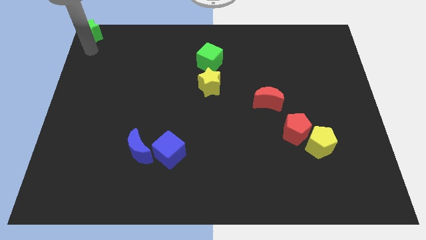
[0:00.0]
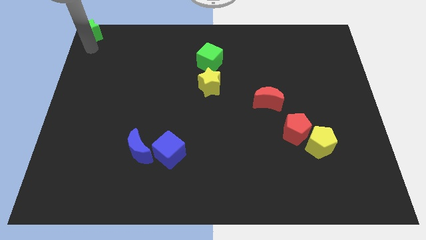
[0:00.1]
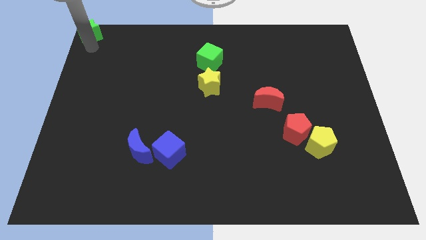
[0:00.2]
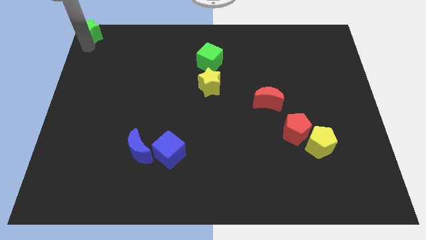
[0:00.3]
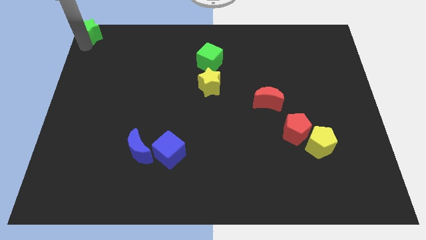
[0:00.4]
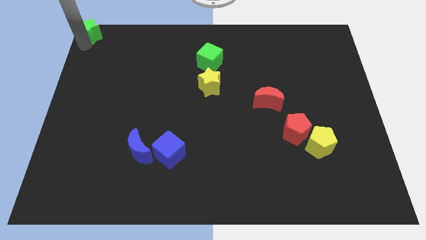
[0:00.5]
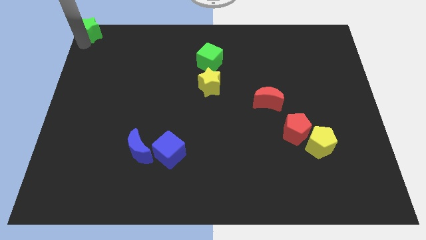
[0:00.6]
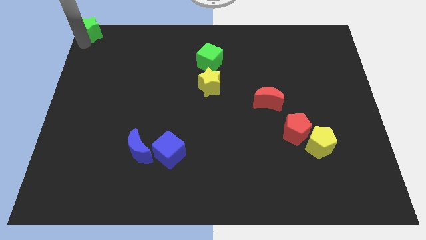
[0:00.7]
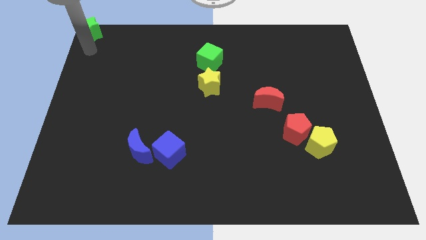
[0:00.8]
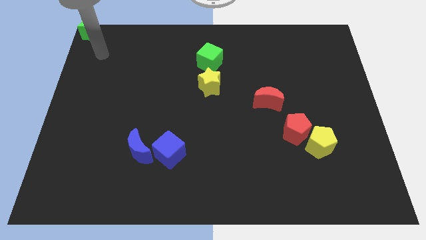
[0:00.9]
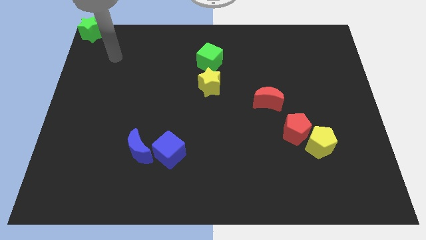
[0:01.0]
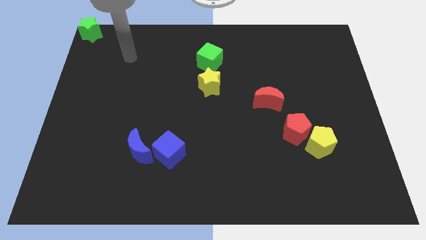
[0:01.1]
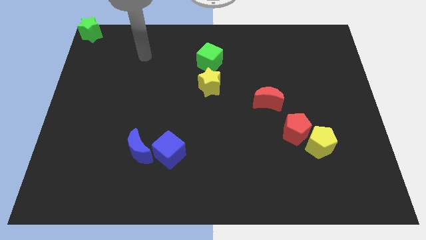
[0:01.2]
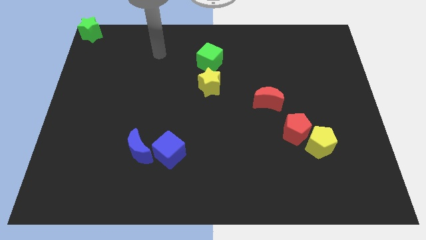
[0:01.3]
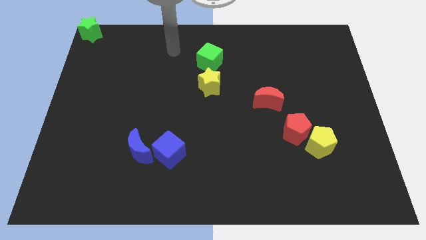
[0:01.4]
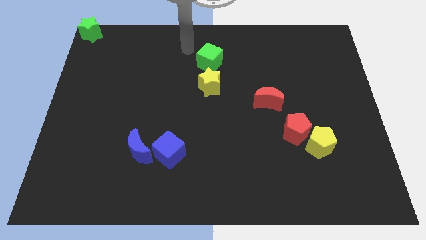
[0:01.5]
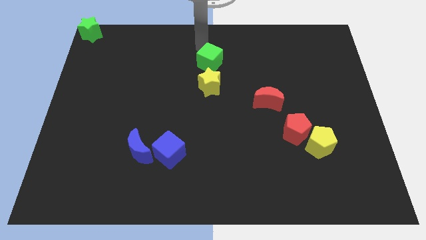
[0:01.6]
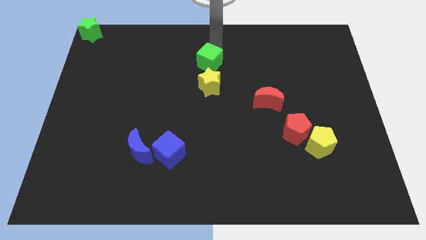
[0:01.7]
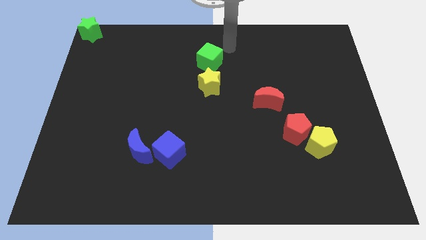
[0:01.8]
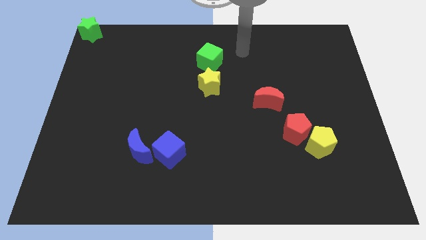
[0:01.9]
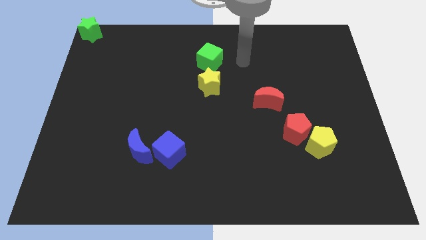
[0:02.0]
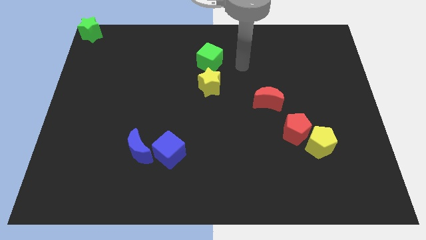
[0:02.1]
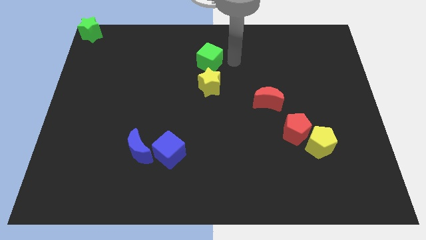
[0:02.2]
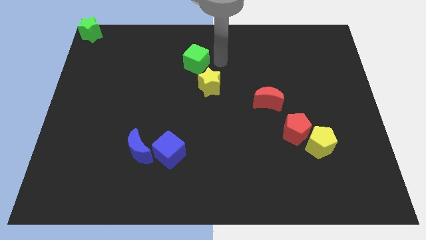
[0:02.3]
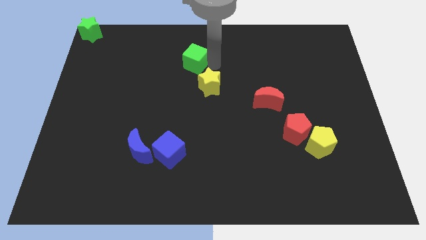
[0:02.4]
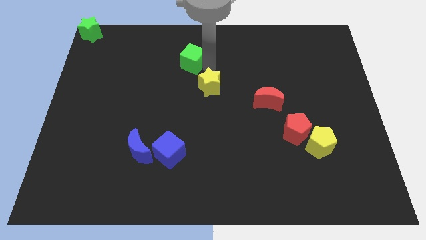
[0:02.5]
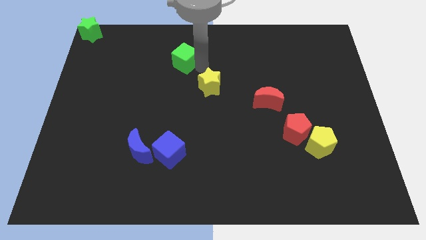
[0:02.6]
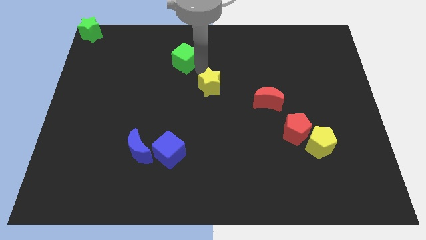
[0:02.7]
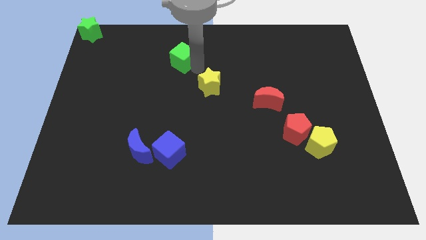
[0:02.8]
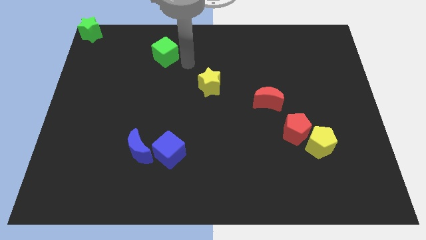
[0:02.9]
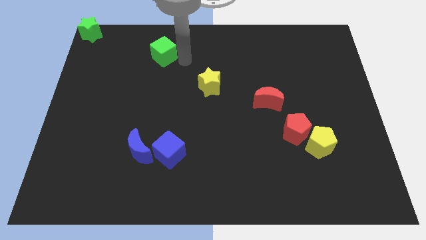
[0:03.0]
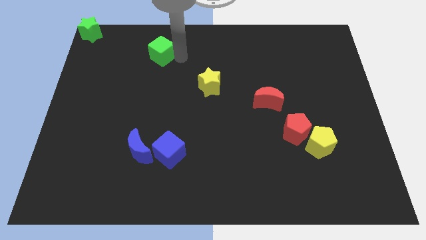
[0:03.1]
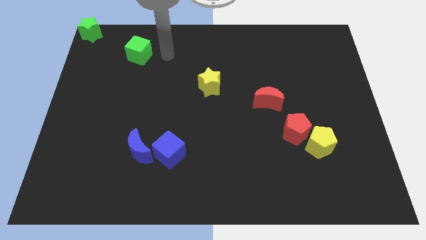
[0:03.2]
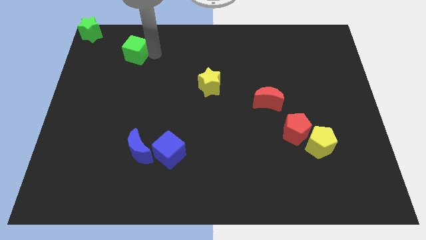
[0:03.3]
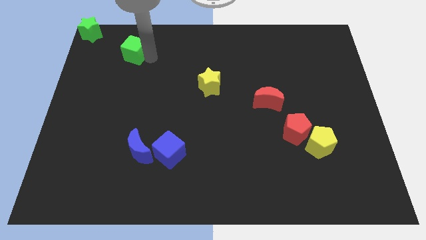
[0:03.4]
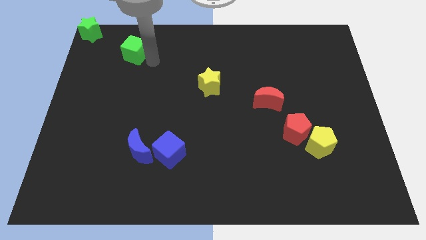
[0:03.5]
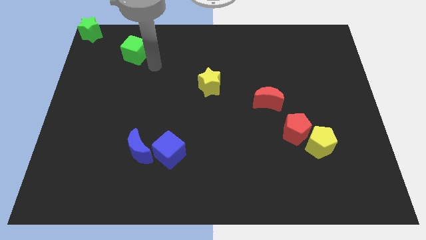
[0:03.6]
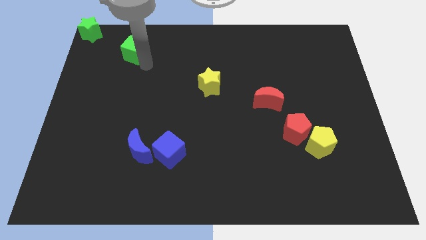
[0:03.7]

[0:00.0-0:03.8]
place the green cube in between the green star and yellow star

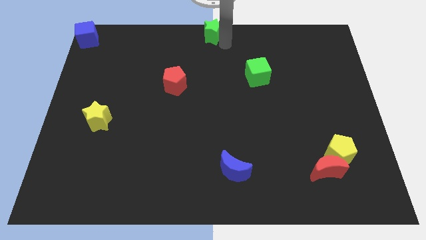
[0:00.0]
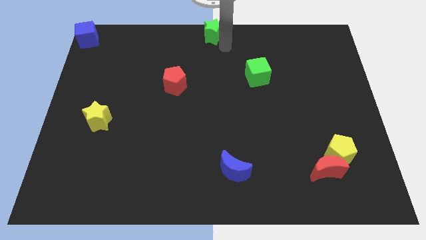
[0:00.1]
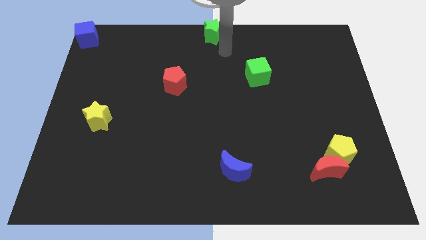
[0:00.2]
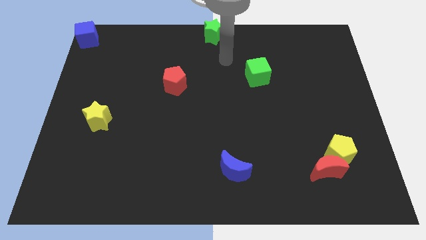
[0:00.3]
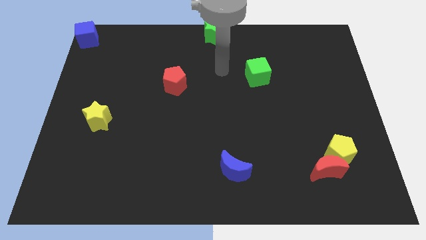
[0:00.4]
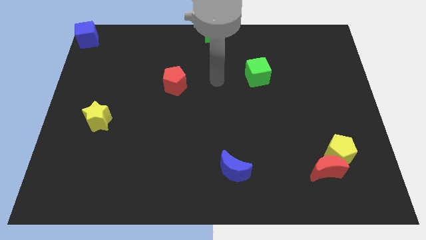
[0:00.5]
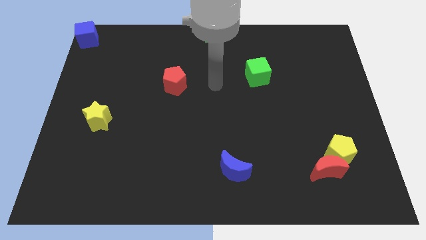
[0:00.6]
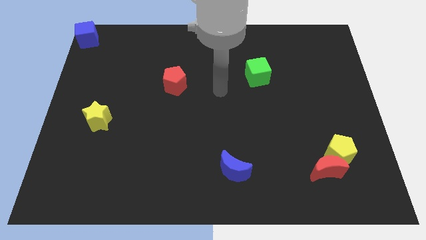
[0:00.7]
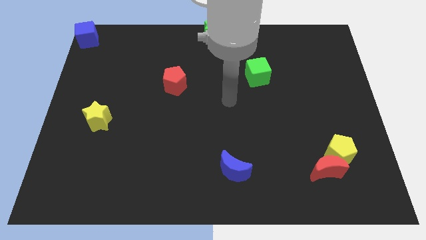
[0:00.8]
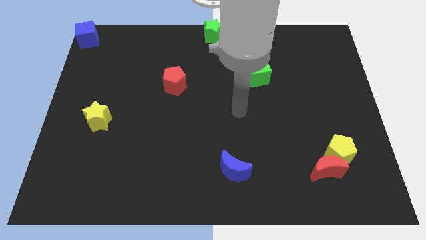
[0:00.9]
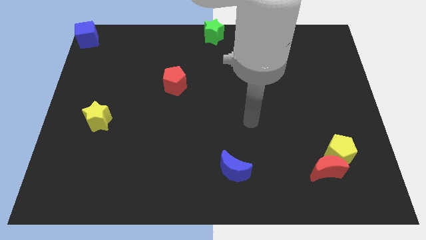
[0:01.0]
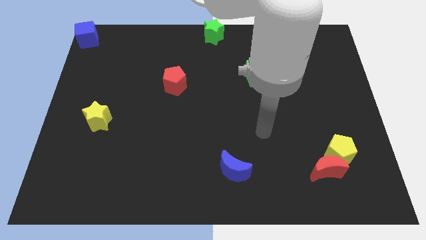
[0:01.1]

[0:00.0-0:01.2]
move the arm away from the green star

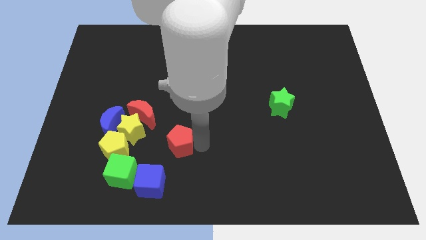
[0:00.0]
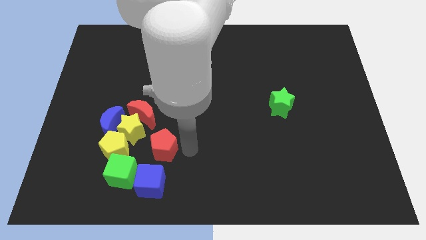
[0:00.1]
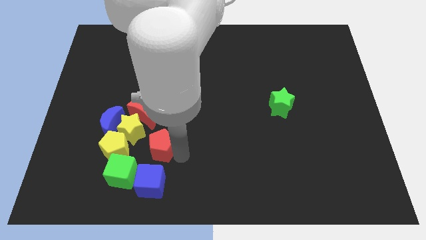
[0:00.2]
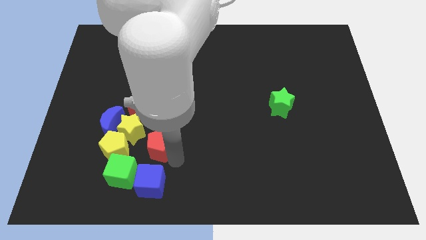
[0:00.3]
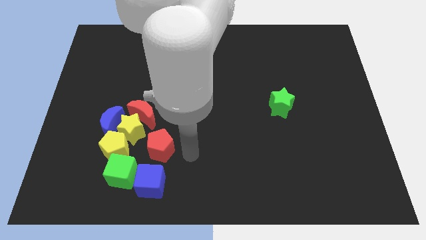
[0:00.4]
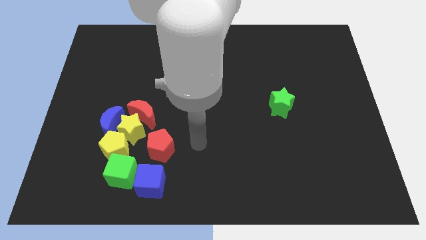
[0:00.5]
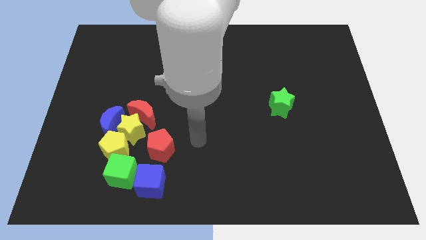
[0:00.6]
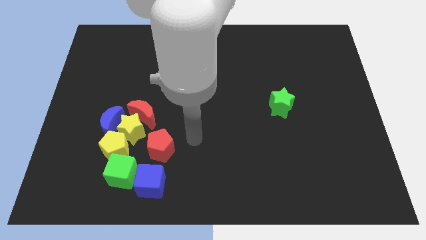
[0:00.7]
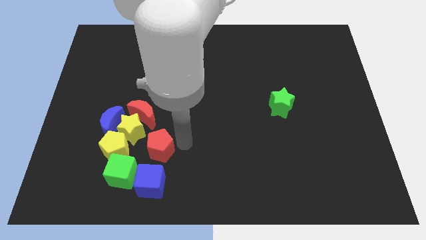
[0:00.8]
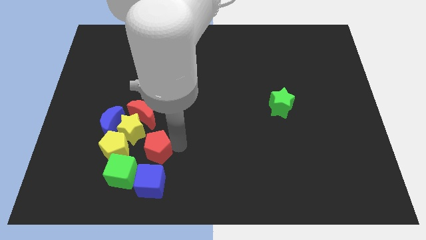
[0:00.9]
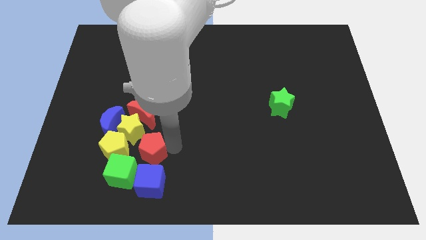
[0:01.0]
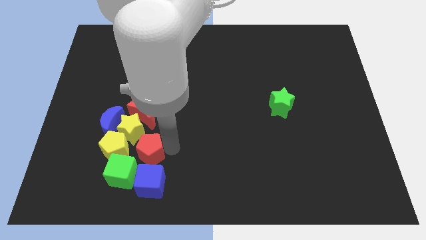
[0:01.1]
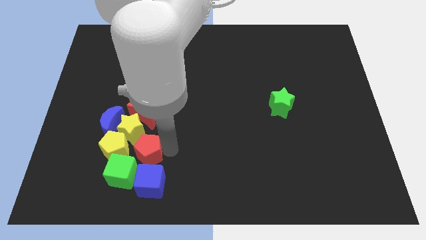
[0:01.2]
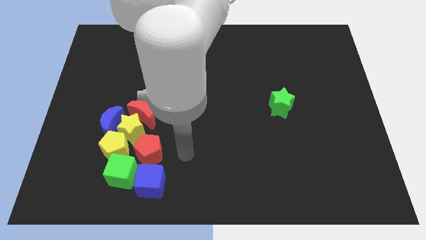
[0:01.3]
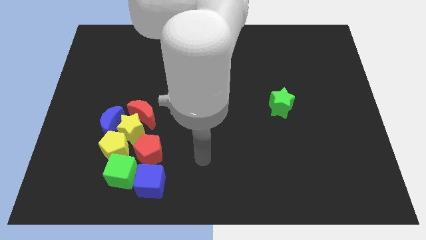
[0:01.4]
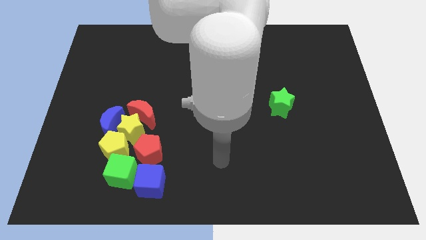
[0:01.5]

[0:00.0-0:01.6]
place the red pentagon above to the blue cube

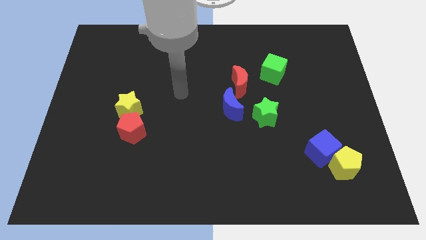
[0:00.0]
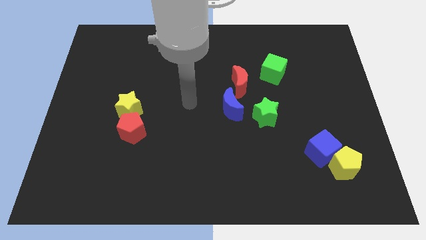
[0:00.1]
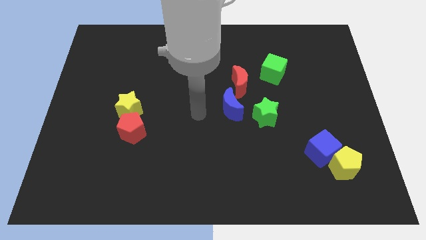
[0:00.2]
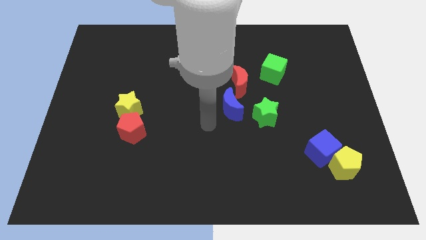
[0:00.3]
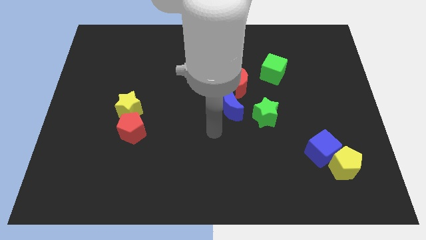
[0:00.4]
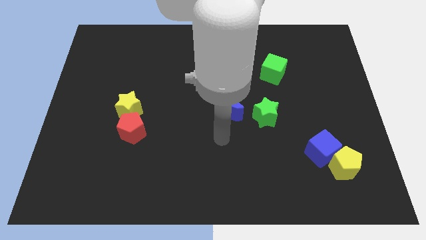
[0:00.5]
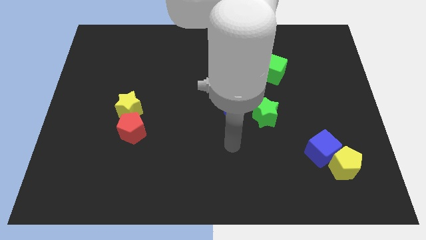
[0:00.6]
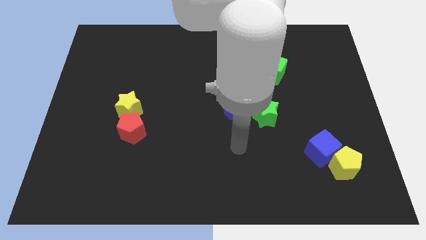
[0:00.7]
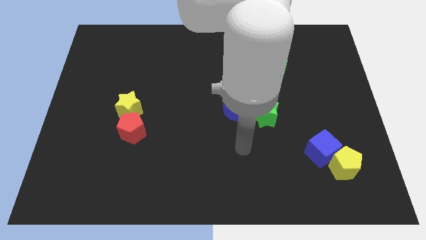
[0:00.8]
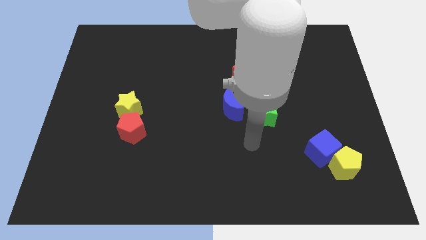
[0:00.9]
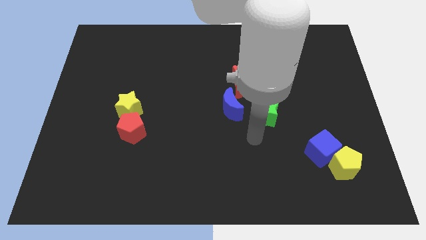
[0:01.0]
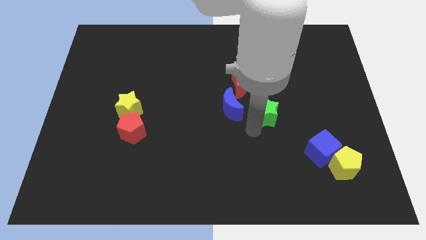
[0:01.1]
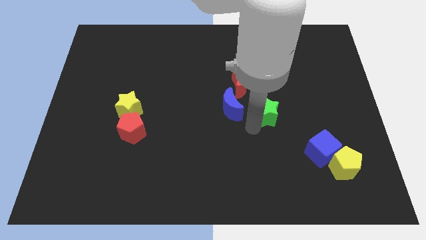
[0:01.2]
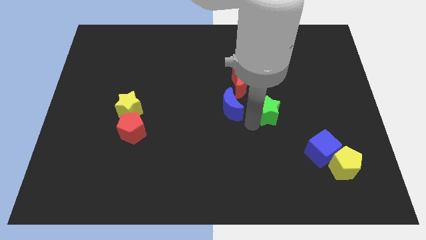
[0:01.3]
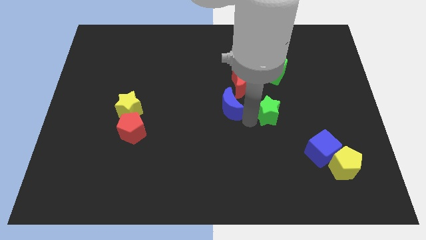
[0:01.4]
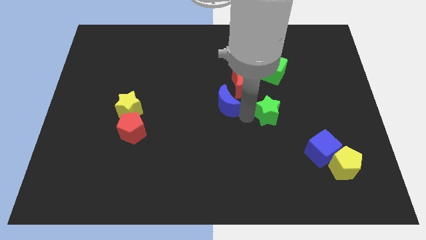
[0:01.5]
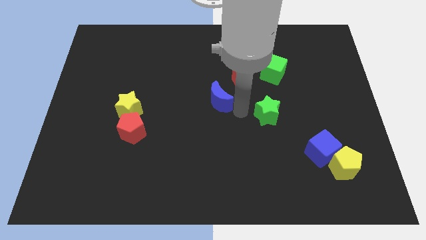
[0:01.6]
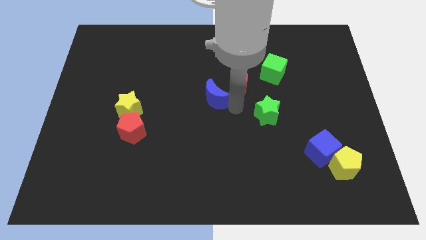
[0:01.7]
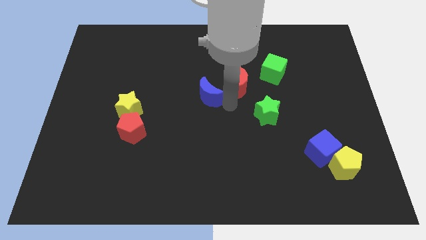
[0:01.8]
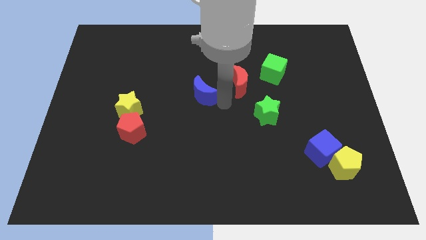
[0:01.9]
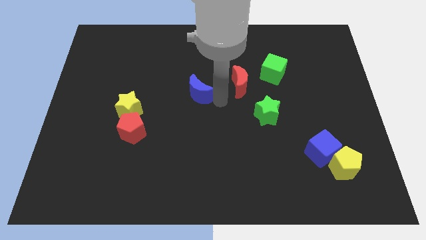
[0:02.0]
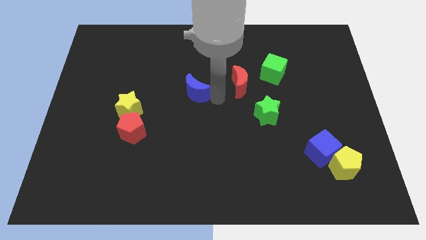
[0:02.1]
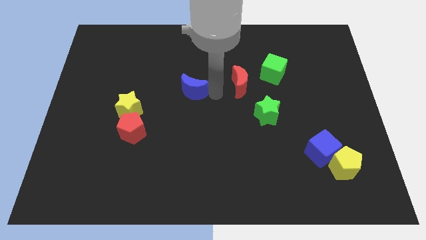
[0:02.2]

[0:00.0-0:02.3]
move the blue crescent to the left of the red crescent
